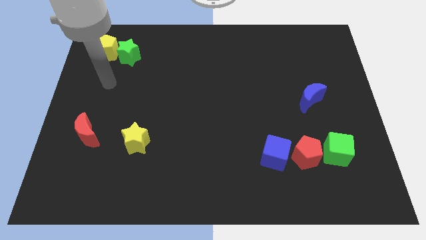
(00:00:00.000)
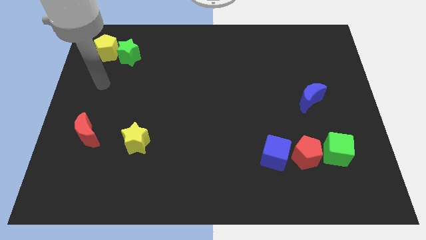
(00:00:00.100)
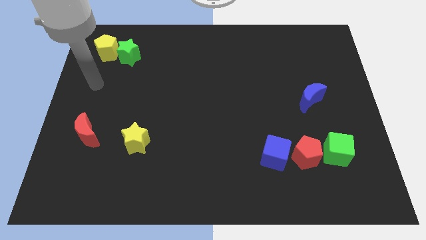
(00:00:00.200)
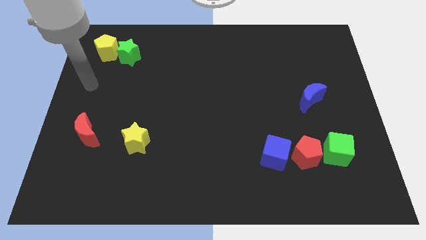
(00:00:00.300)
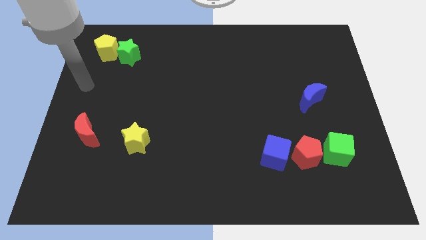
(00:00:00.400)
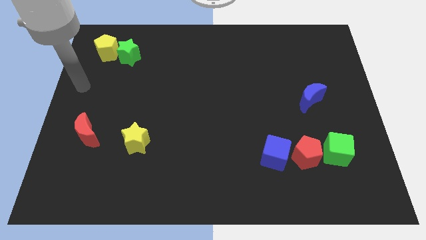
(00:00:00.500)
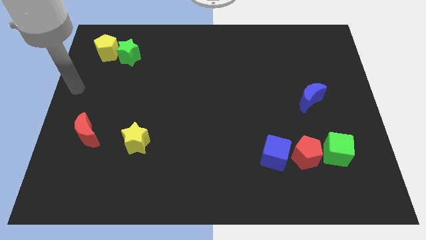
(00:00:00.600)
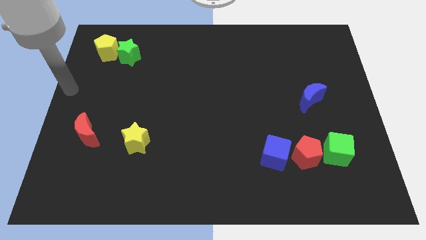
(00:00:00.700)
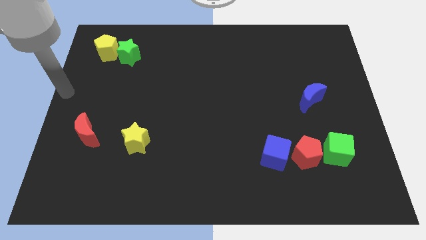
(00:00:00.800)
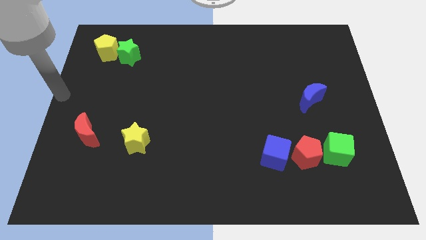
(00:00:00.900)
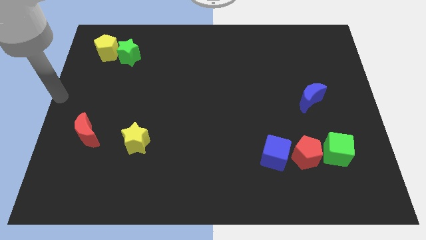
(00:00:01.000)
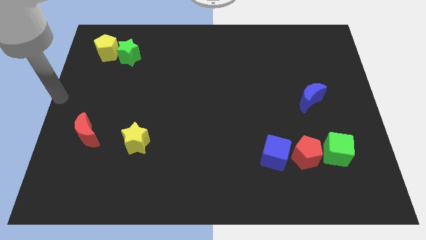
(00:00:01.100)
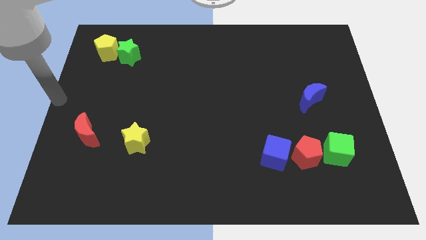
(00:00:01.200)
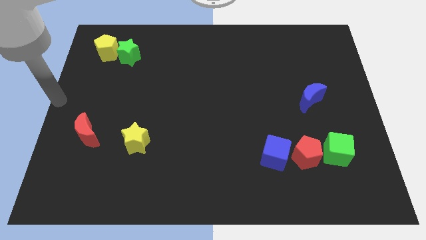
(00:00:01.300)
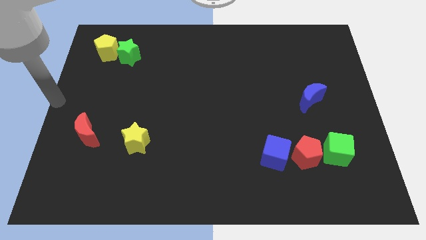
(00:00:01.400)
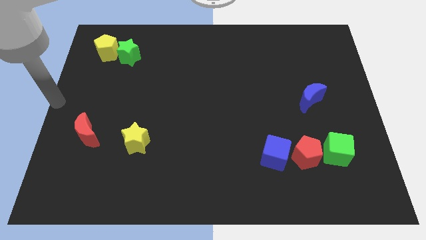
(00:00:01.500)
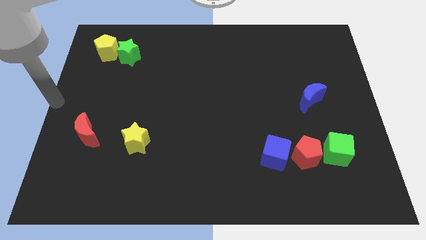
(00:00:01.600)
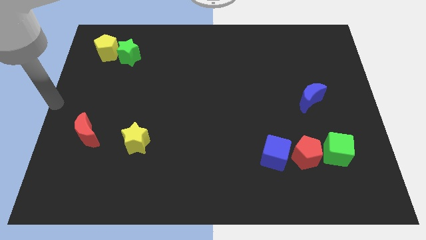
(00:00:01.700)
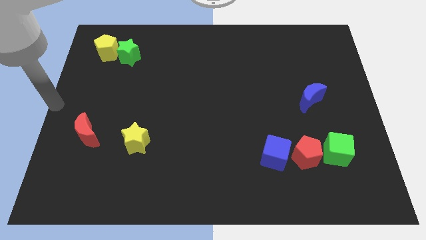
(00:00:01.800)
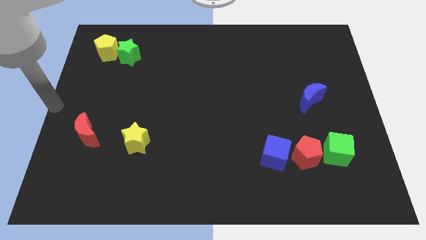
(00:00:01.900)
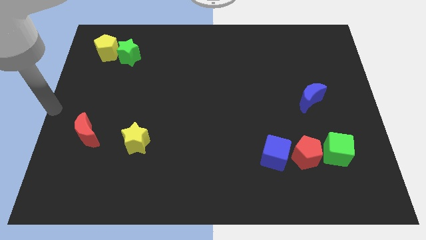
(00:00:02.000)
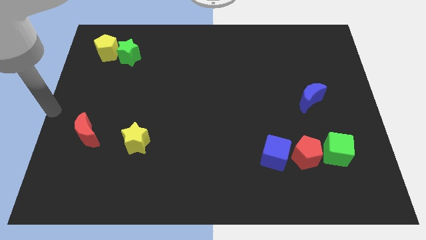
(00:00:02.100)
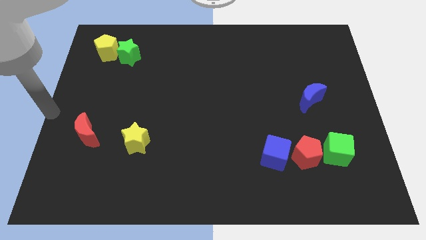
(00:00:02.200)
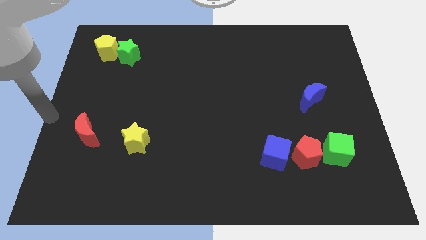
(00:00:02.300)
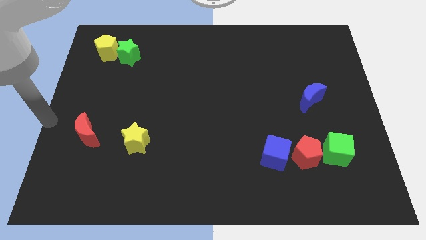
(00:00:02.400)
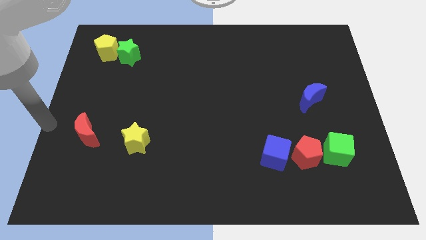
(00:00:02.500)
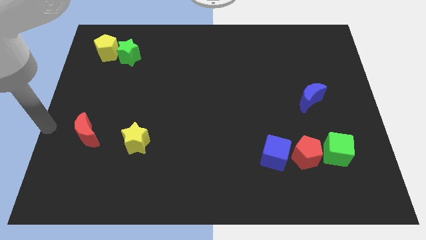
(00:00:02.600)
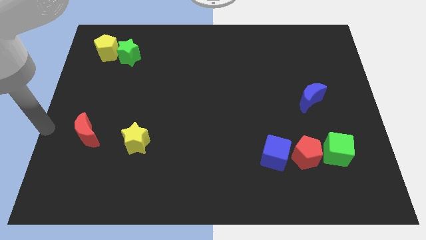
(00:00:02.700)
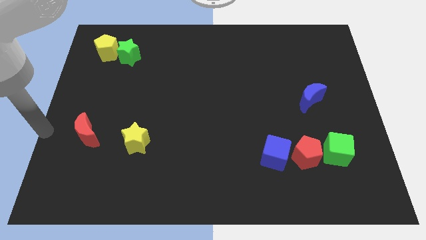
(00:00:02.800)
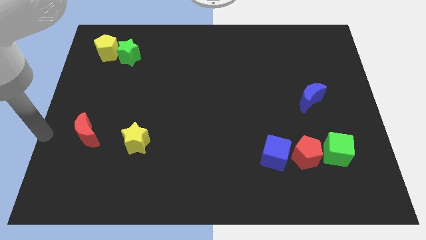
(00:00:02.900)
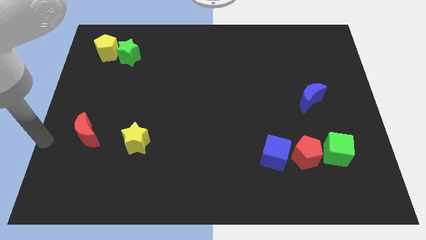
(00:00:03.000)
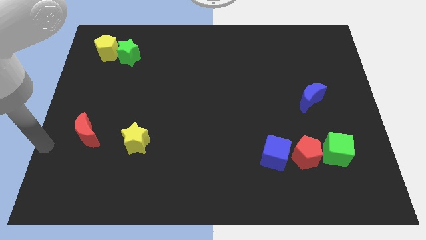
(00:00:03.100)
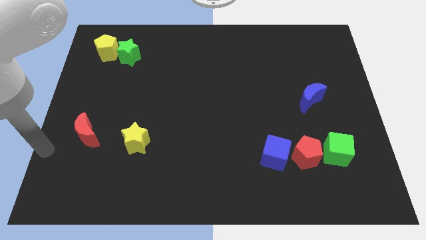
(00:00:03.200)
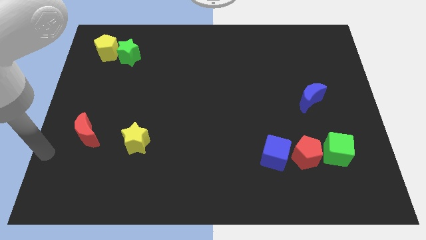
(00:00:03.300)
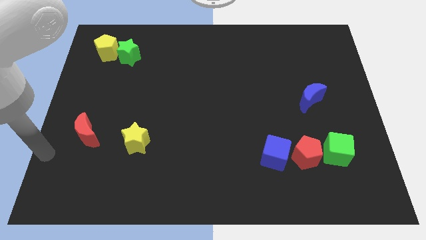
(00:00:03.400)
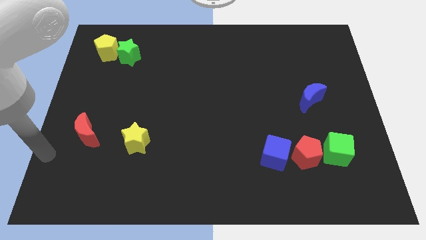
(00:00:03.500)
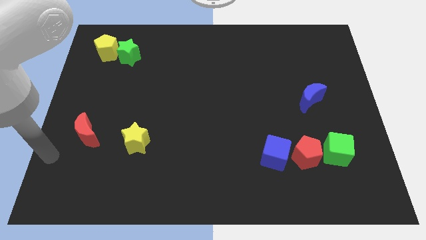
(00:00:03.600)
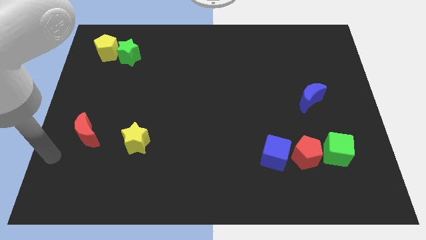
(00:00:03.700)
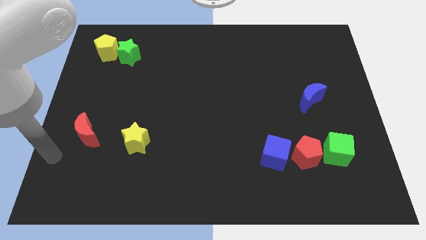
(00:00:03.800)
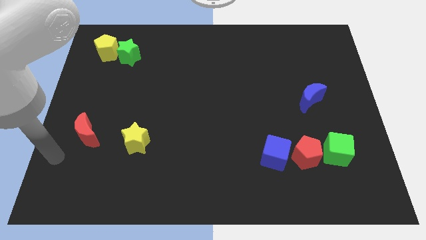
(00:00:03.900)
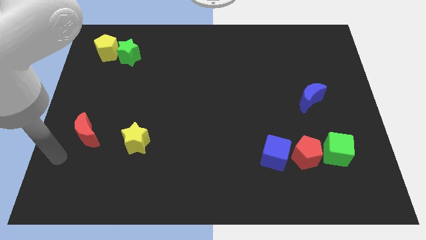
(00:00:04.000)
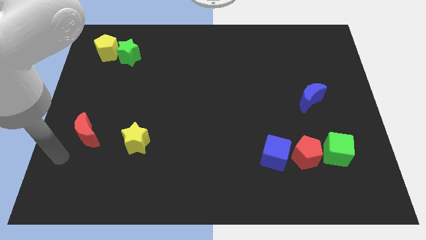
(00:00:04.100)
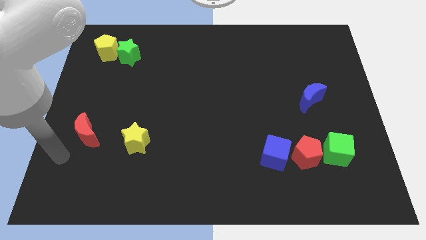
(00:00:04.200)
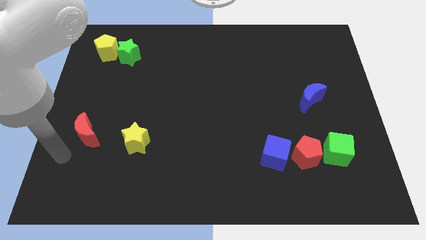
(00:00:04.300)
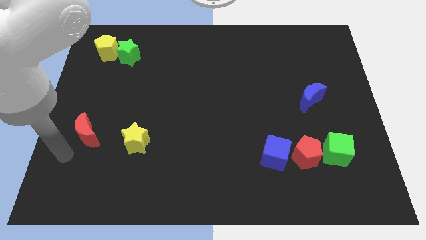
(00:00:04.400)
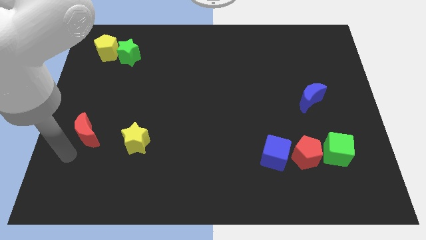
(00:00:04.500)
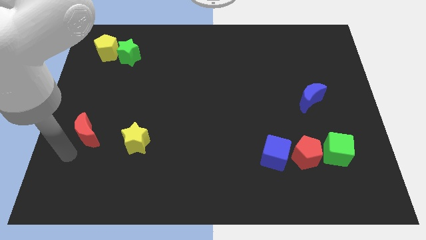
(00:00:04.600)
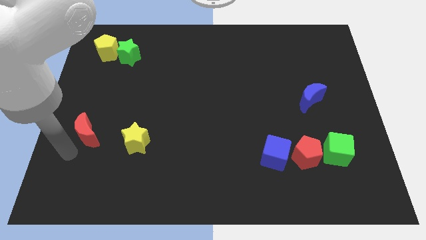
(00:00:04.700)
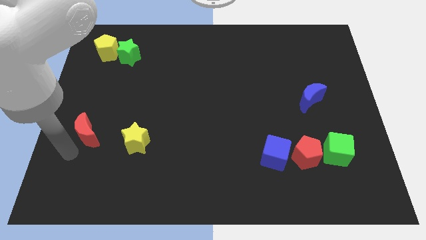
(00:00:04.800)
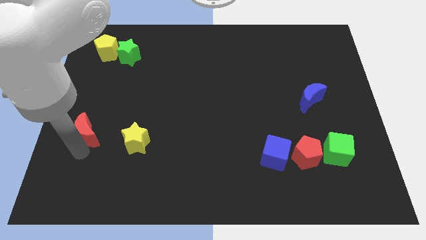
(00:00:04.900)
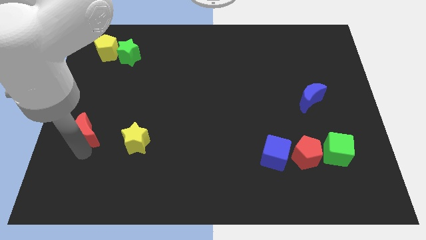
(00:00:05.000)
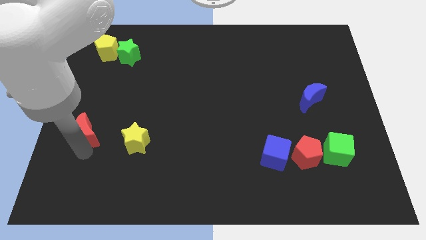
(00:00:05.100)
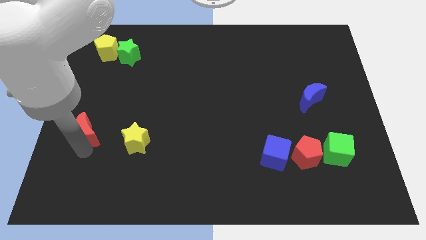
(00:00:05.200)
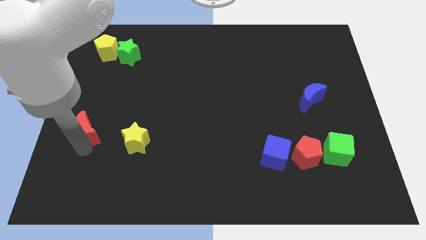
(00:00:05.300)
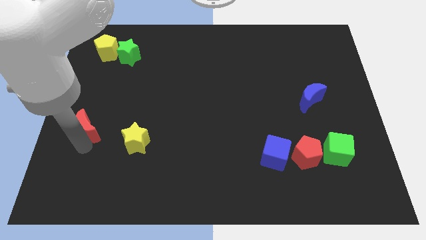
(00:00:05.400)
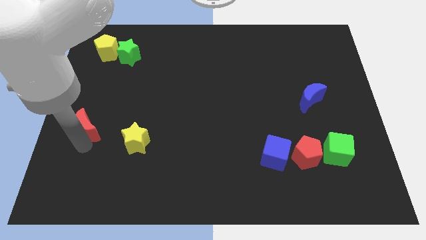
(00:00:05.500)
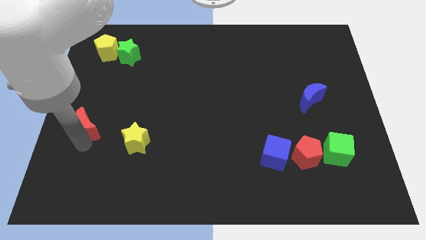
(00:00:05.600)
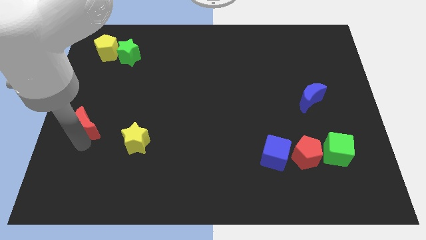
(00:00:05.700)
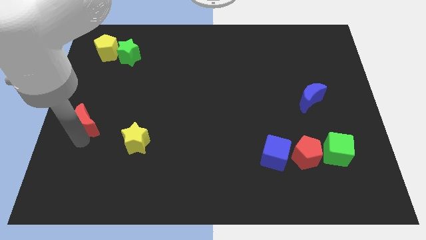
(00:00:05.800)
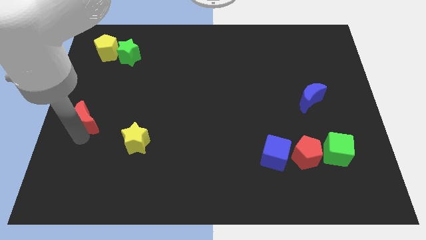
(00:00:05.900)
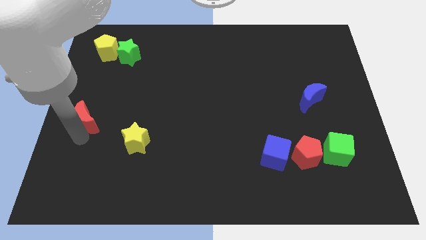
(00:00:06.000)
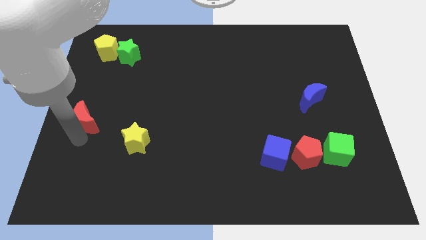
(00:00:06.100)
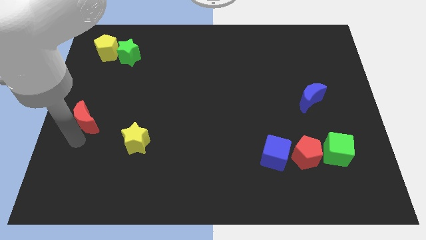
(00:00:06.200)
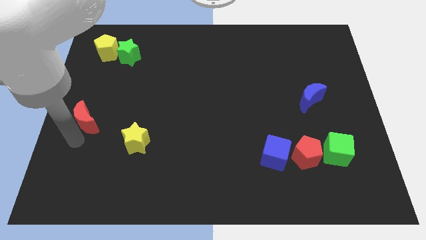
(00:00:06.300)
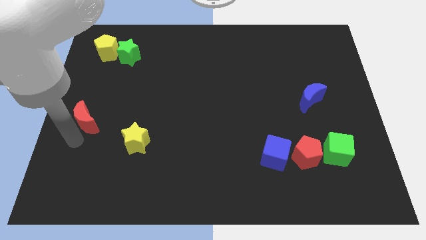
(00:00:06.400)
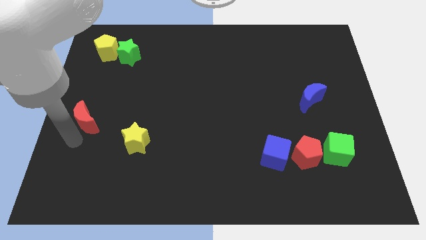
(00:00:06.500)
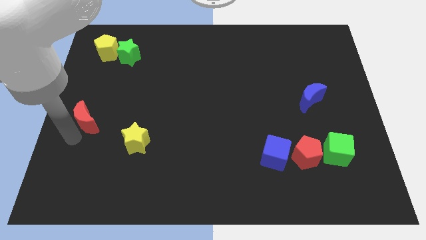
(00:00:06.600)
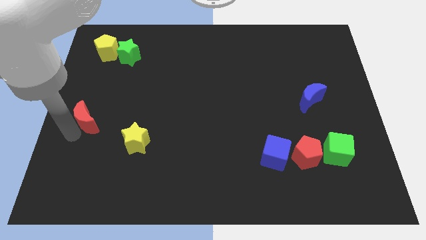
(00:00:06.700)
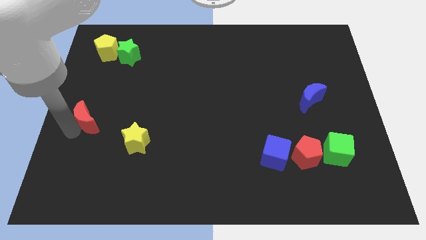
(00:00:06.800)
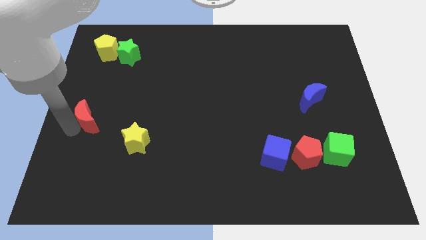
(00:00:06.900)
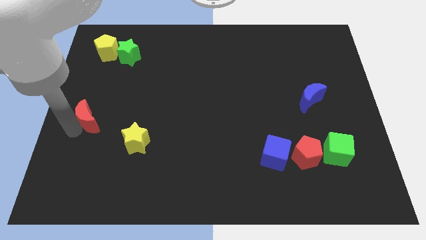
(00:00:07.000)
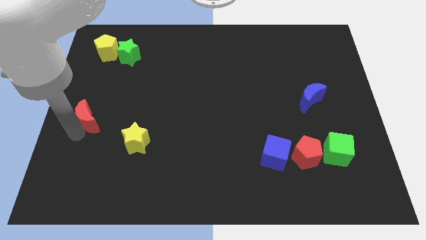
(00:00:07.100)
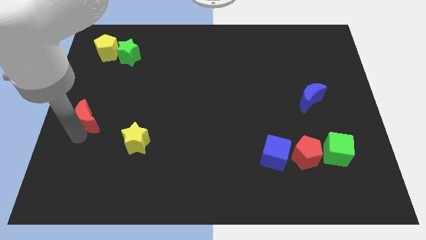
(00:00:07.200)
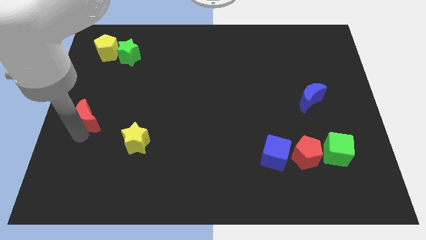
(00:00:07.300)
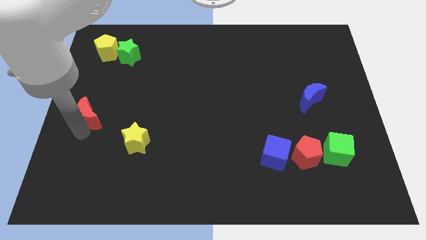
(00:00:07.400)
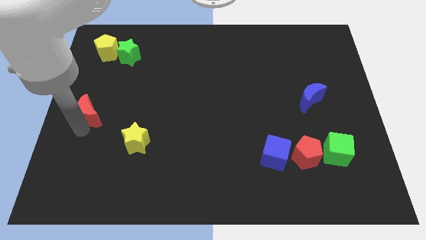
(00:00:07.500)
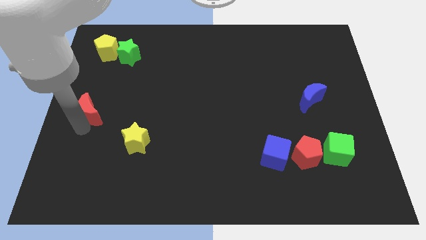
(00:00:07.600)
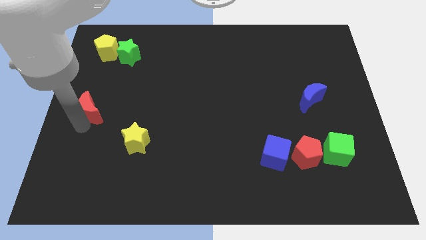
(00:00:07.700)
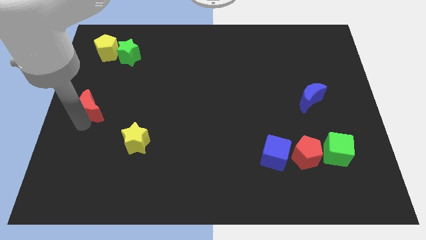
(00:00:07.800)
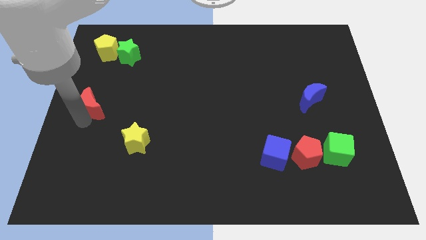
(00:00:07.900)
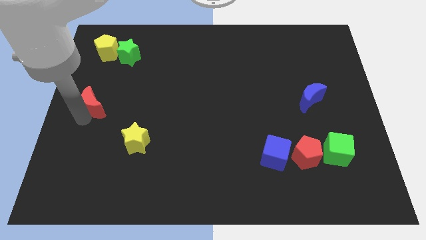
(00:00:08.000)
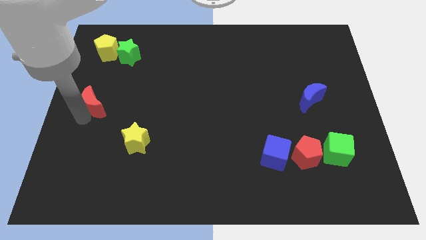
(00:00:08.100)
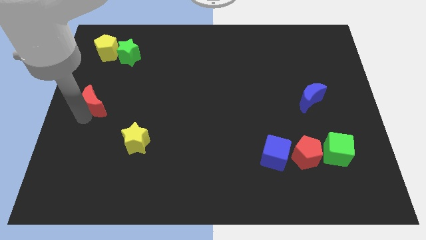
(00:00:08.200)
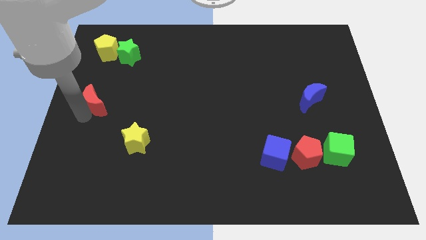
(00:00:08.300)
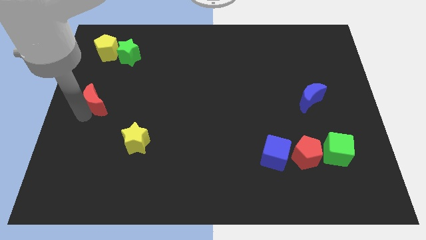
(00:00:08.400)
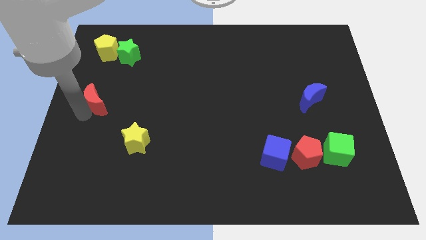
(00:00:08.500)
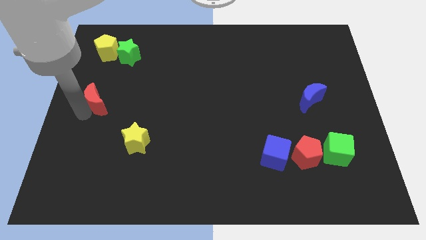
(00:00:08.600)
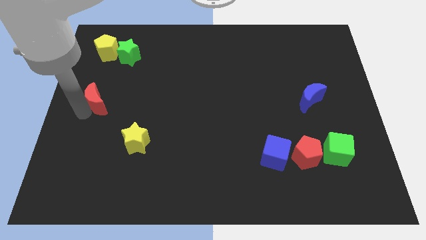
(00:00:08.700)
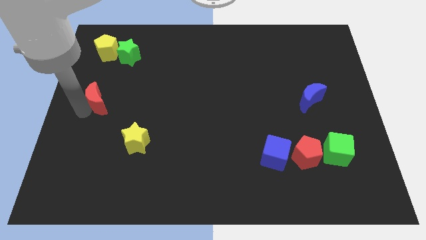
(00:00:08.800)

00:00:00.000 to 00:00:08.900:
push the red moon closer to the yellow pentagon
